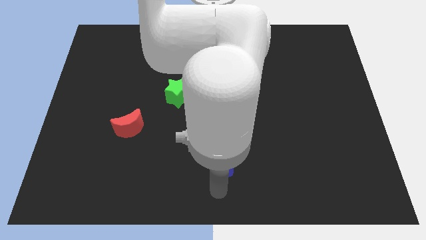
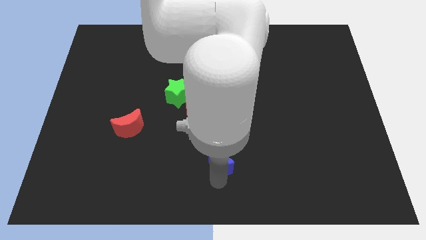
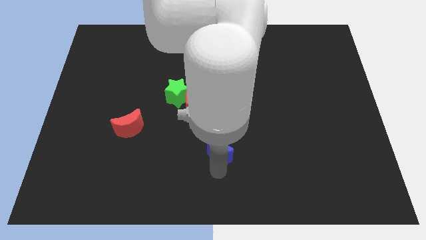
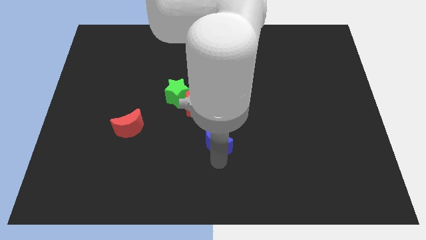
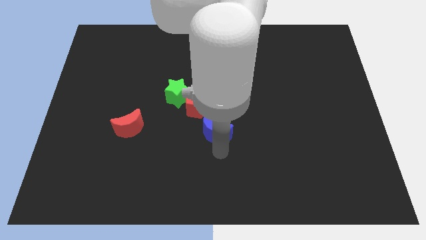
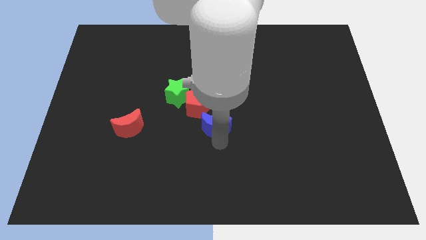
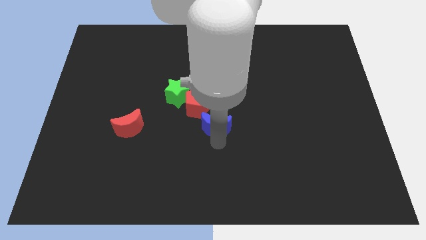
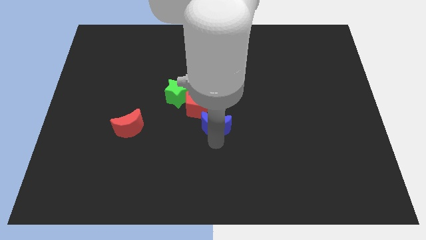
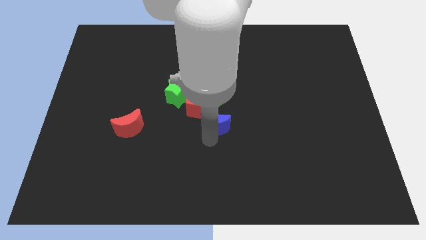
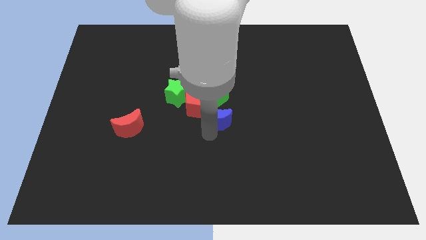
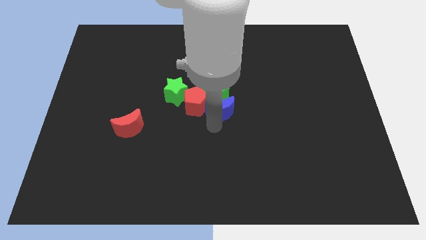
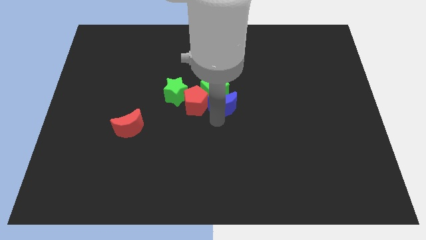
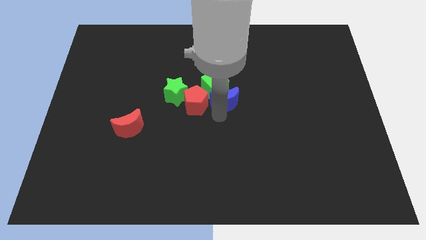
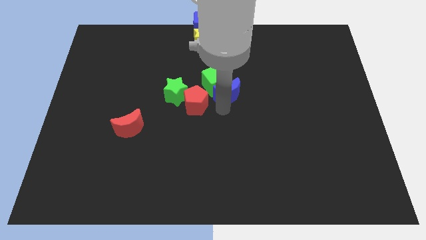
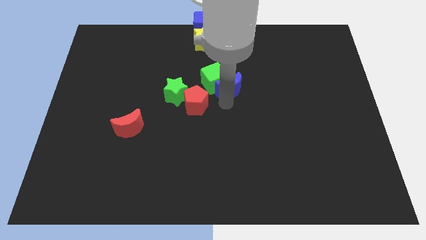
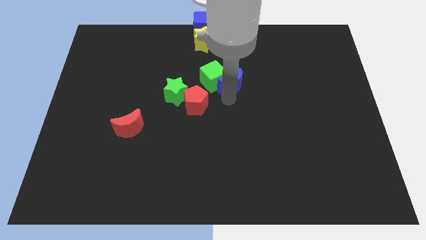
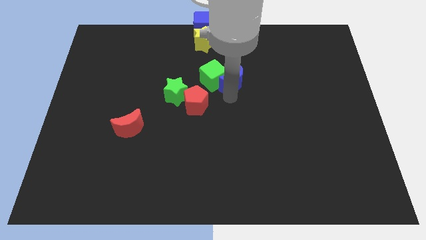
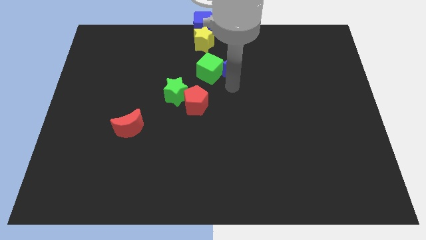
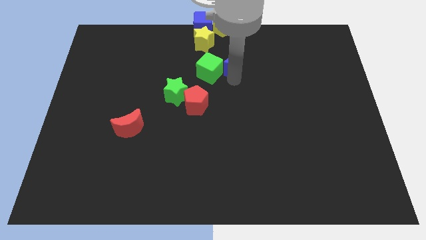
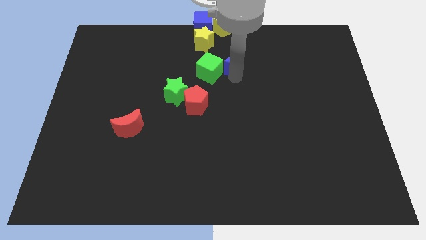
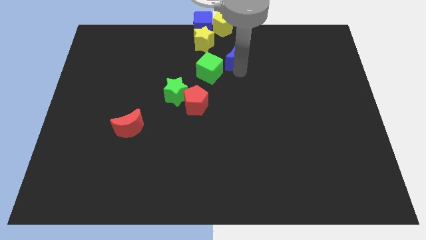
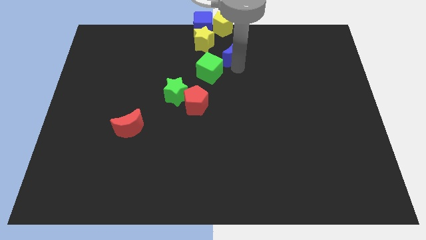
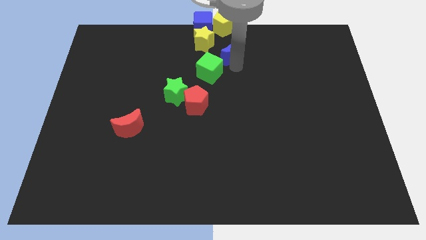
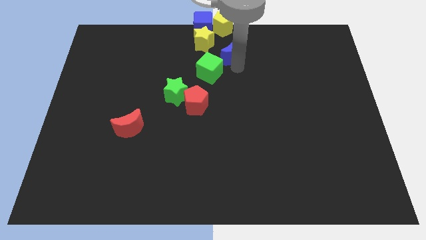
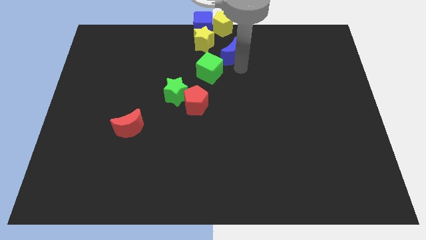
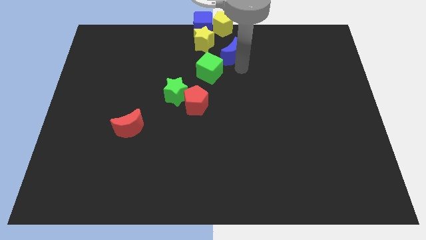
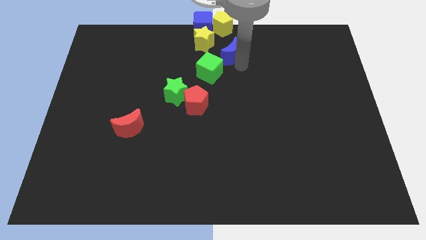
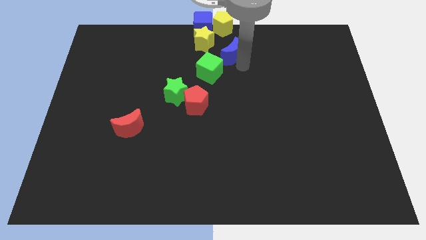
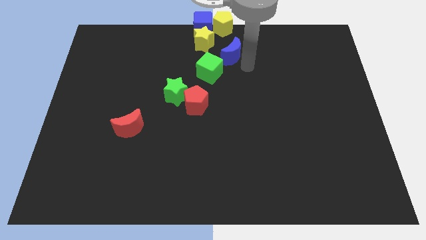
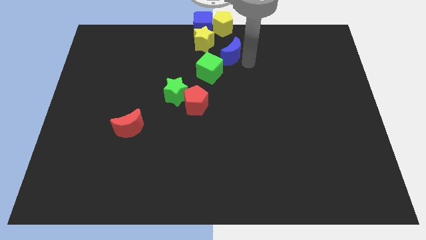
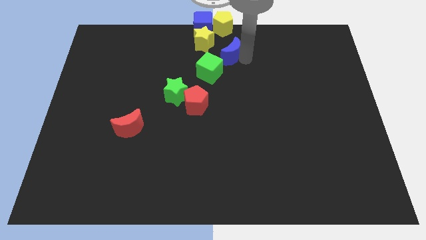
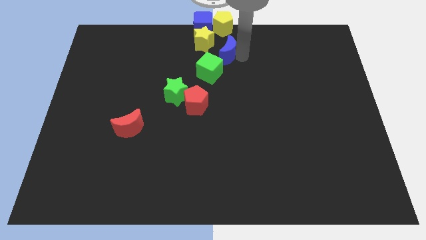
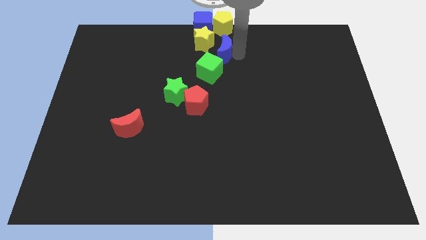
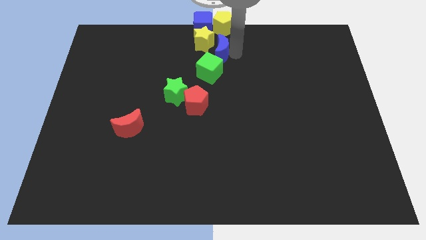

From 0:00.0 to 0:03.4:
move the blue crescent above the green cube

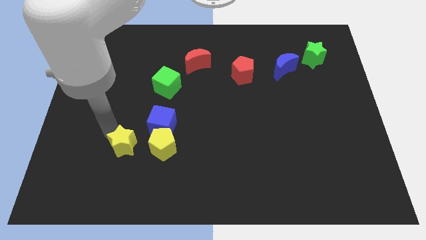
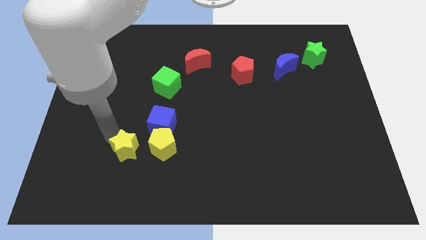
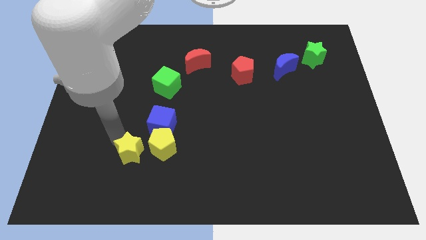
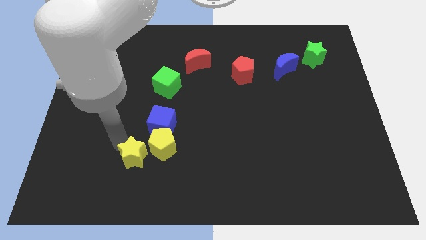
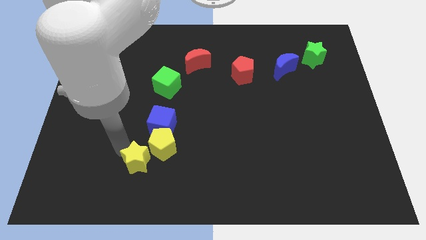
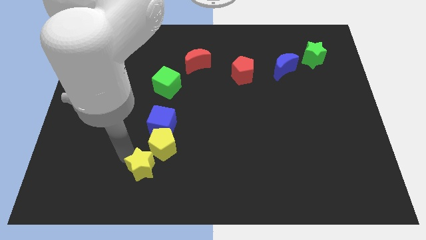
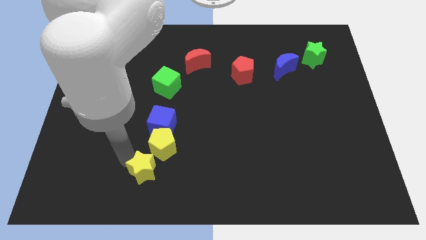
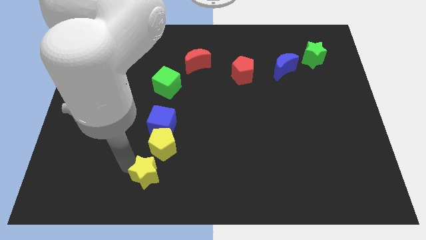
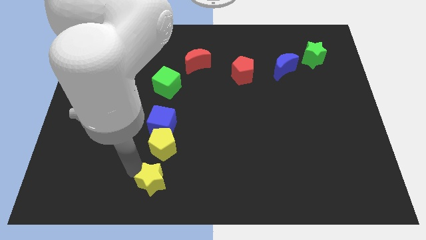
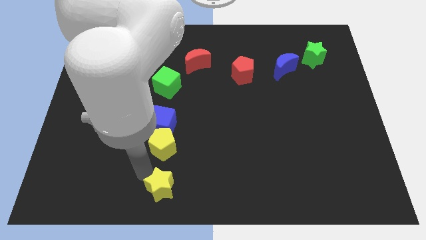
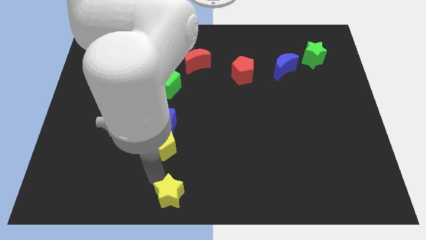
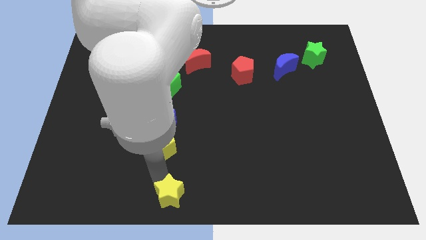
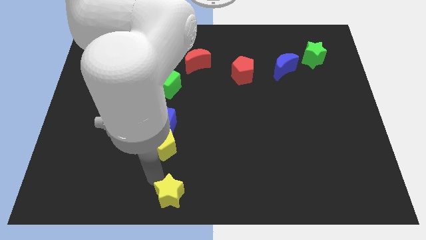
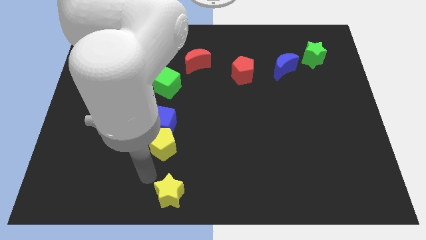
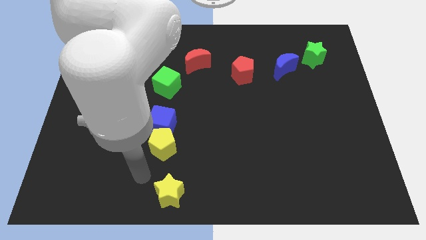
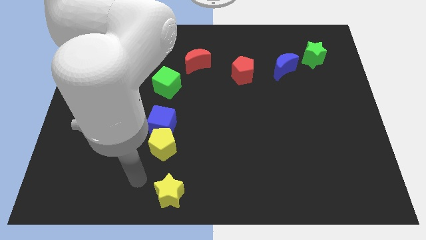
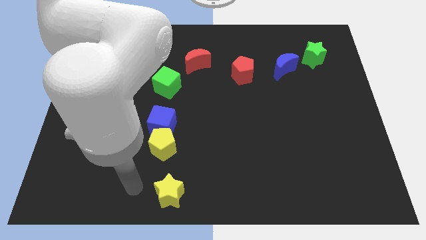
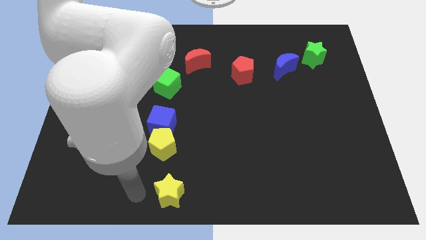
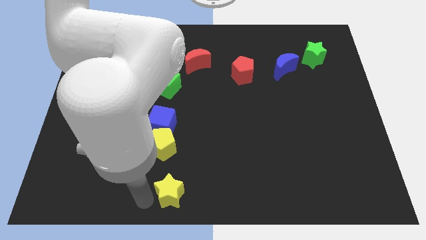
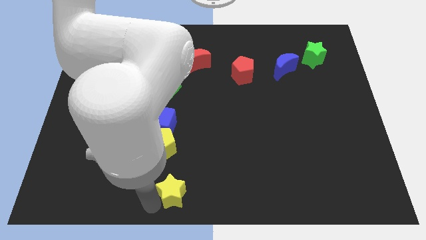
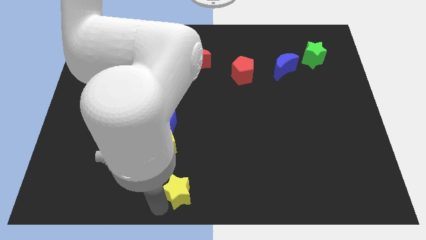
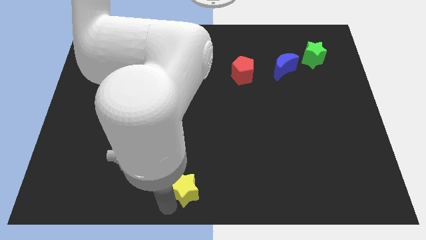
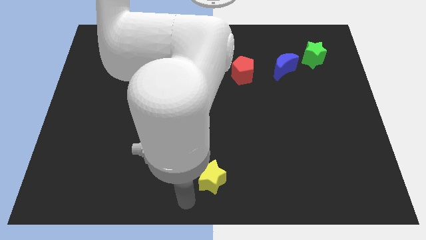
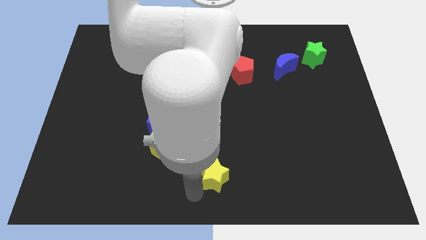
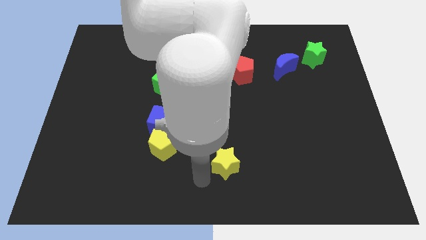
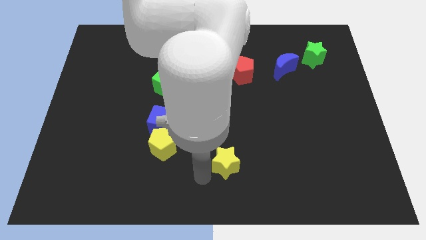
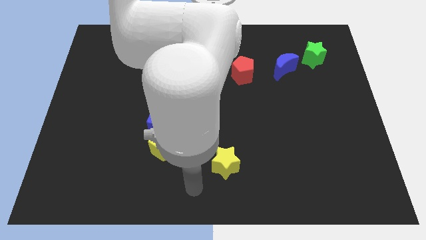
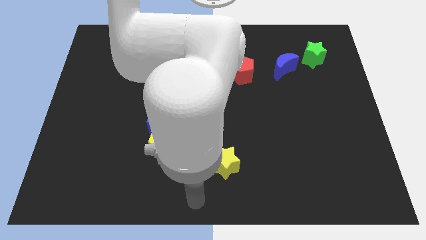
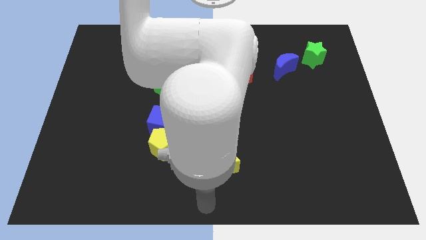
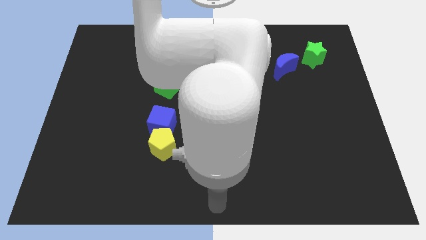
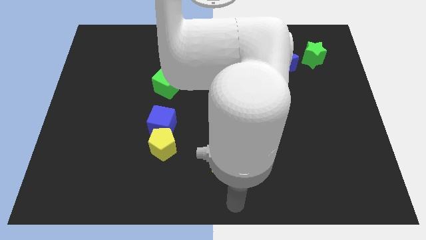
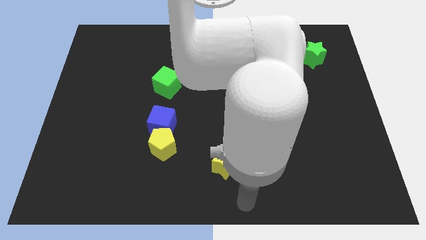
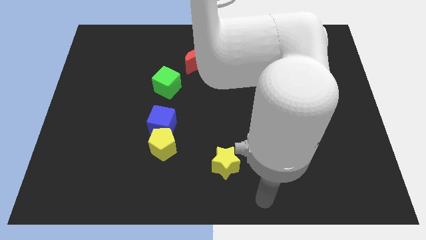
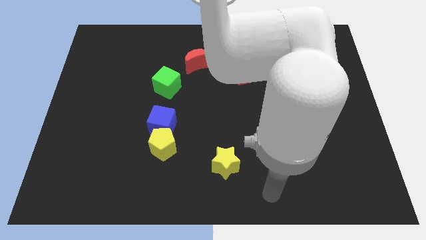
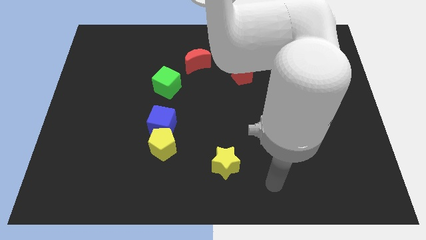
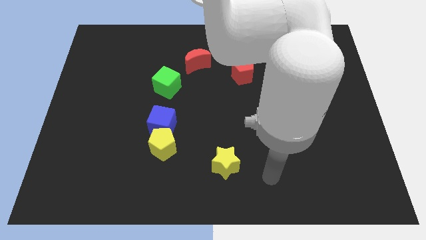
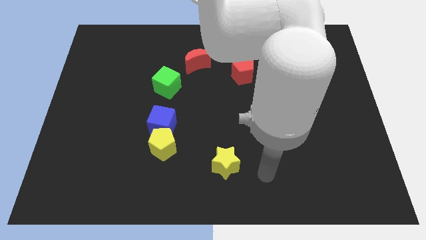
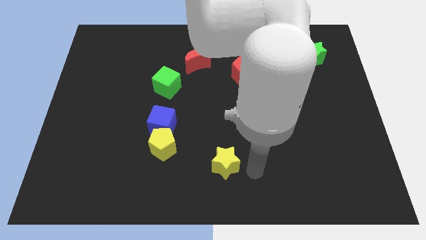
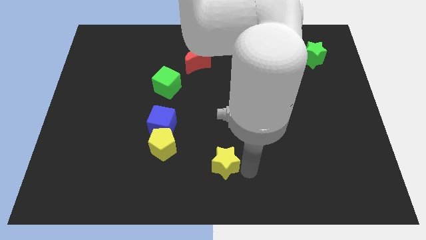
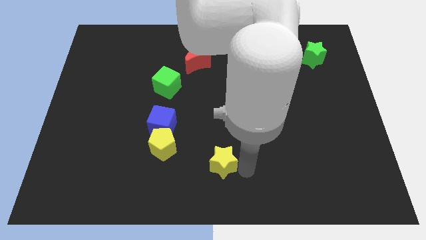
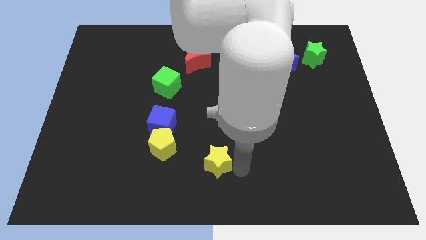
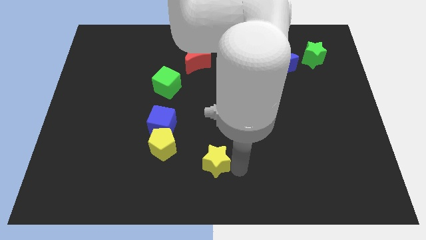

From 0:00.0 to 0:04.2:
place the yellow star vertically below the red crescent

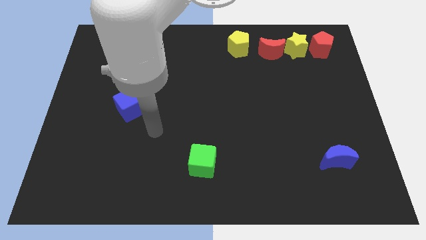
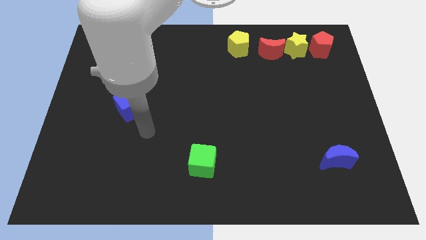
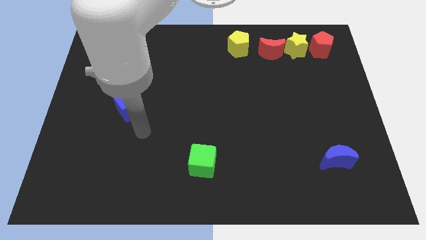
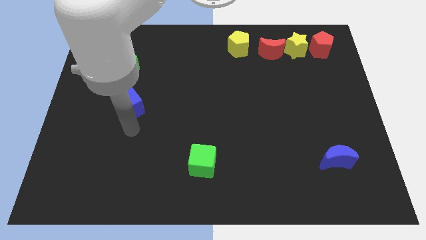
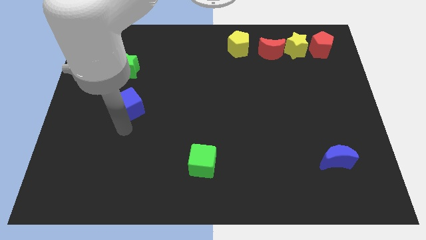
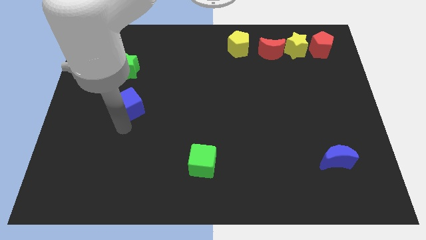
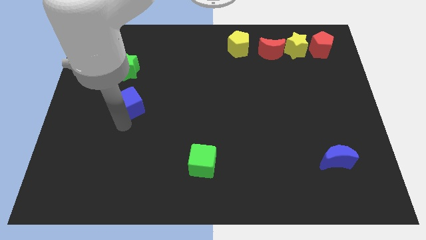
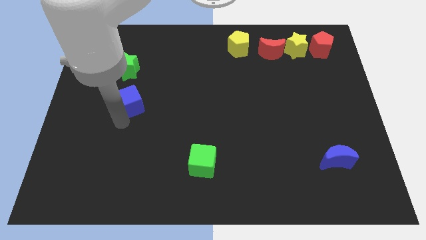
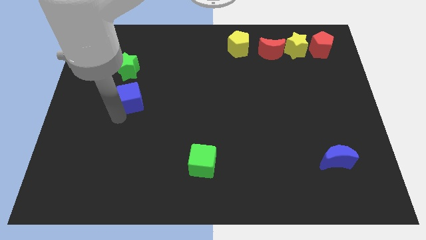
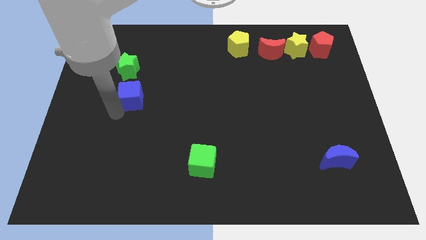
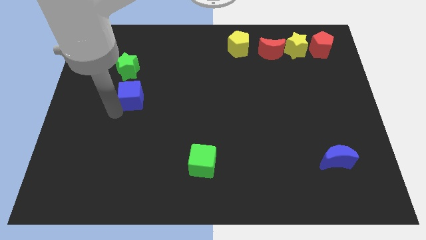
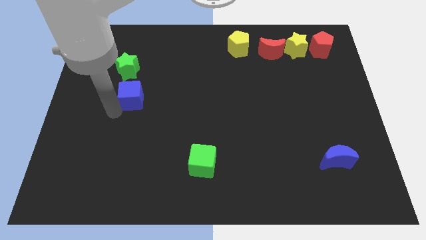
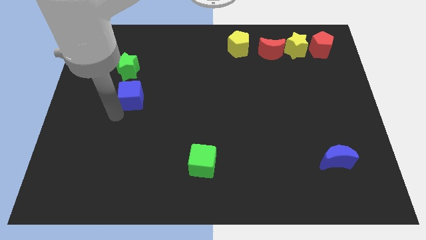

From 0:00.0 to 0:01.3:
slightly move the blue cube up

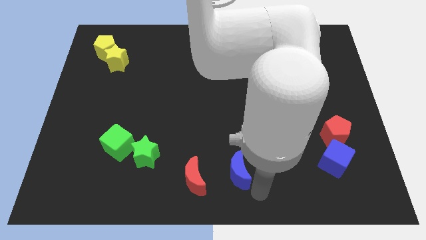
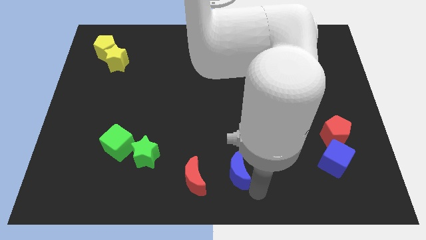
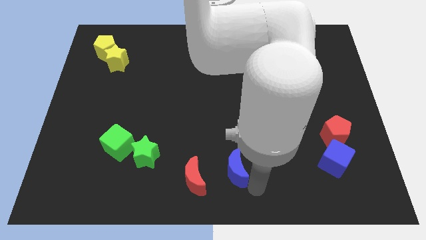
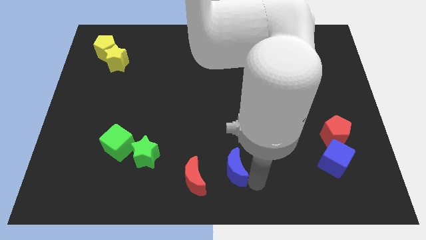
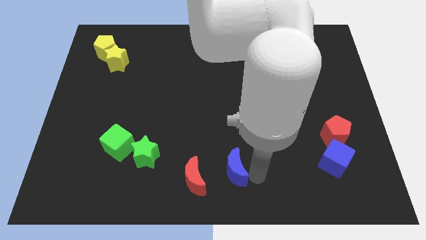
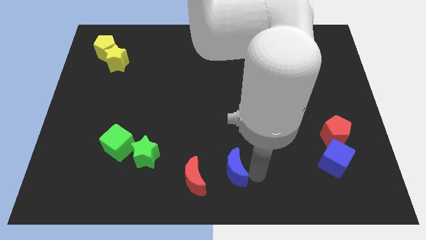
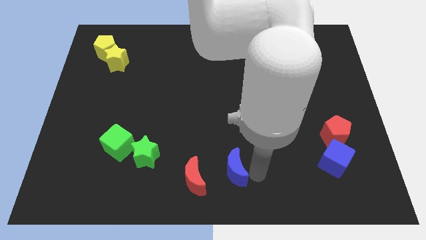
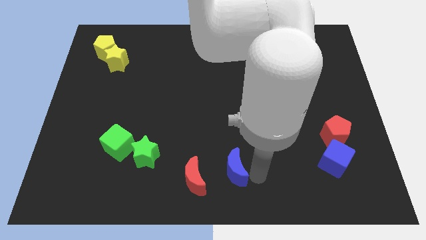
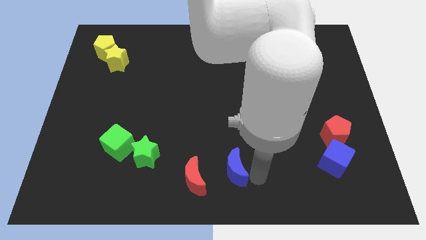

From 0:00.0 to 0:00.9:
slightly move the blue crescent to the top of the center
